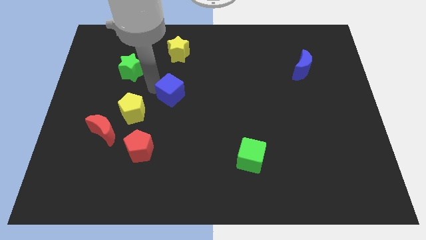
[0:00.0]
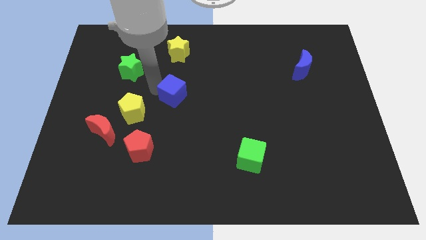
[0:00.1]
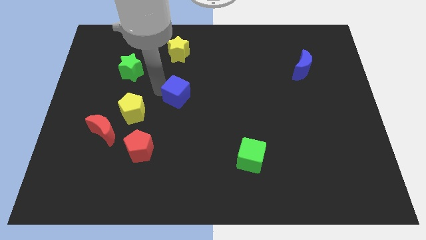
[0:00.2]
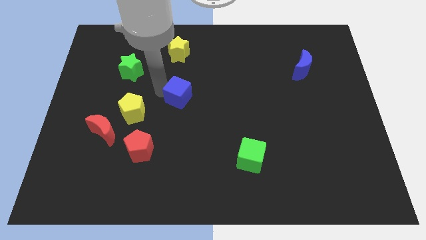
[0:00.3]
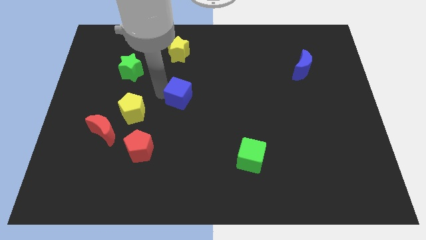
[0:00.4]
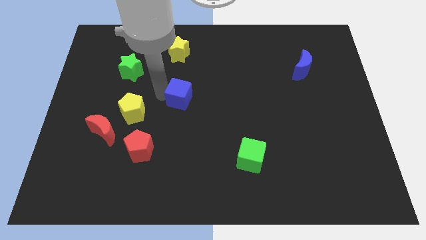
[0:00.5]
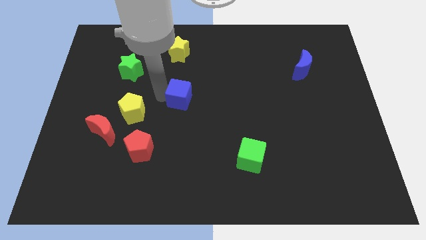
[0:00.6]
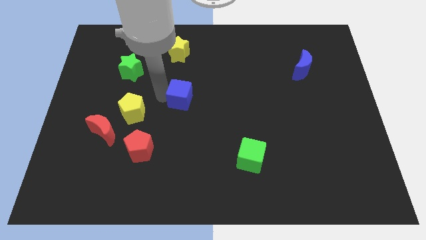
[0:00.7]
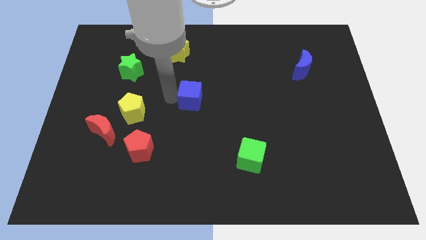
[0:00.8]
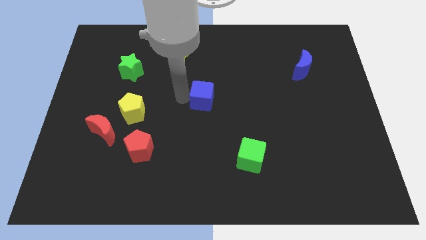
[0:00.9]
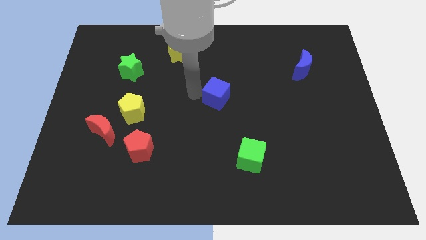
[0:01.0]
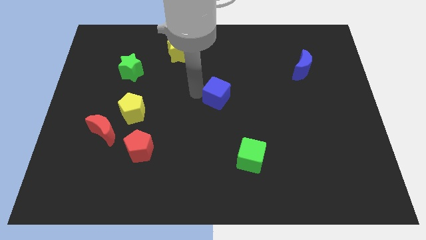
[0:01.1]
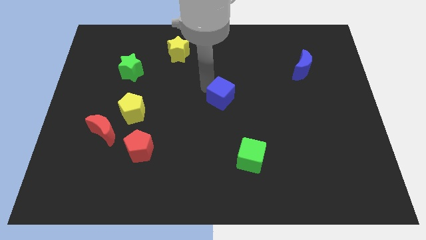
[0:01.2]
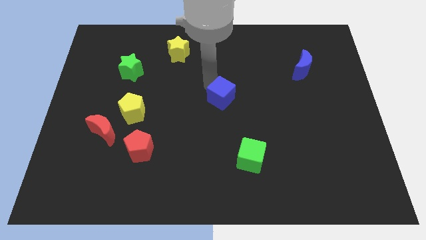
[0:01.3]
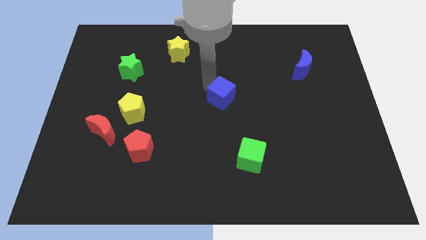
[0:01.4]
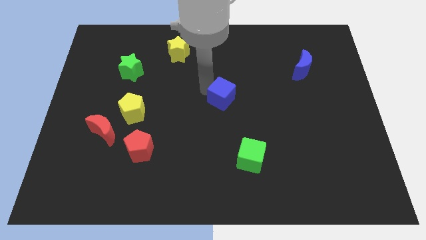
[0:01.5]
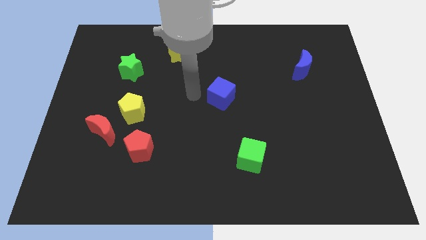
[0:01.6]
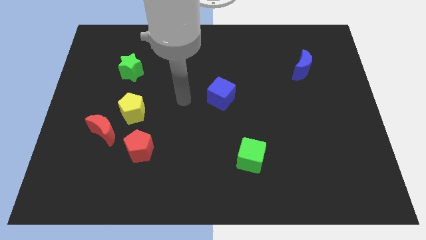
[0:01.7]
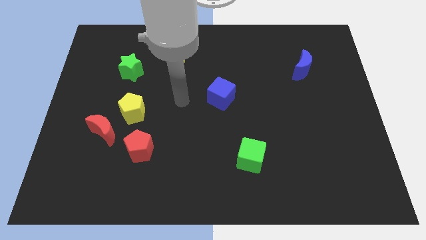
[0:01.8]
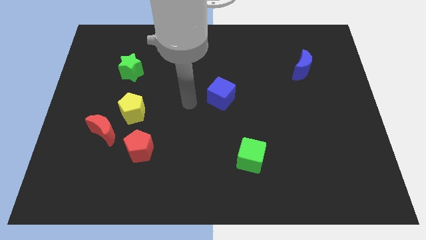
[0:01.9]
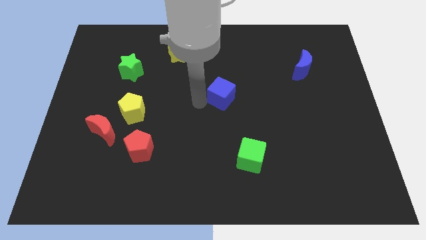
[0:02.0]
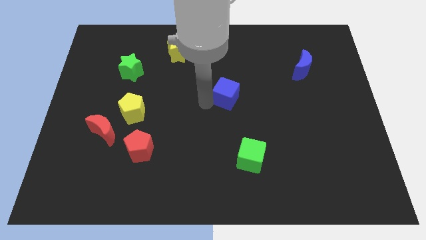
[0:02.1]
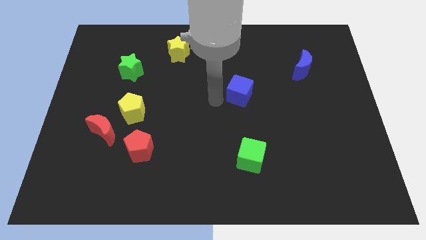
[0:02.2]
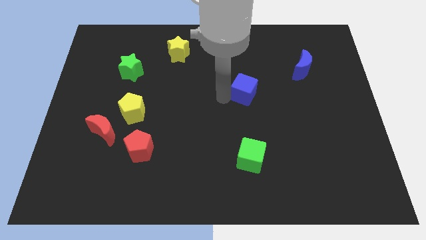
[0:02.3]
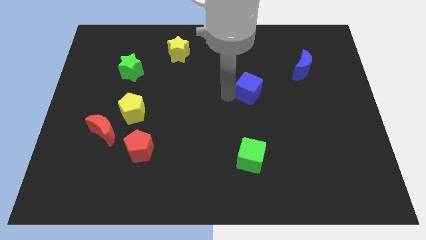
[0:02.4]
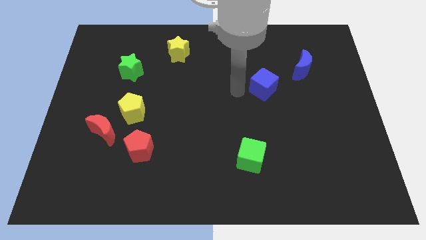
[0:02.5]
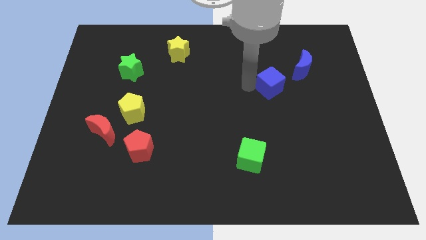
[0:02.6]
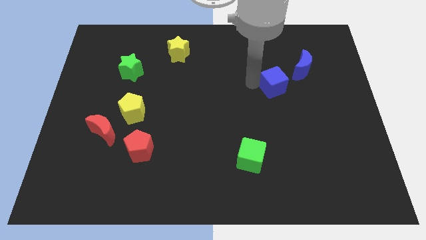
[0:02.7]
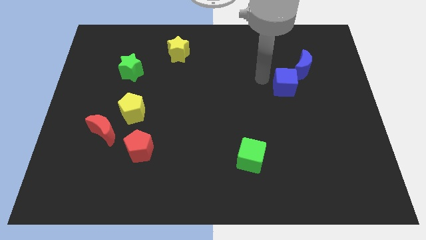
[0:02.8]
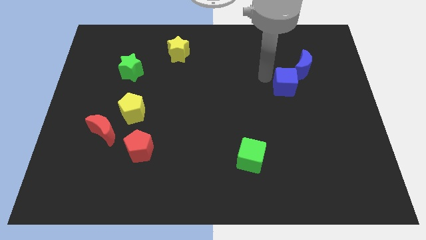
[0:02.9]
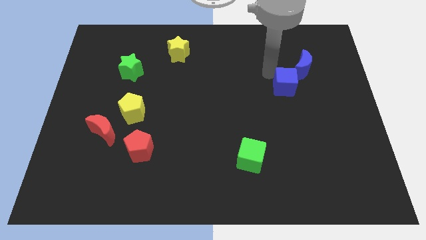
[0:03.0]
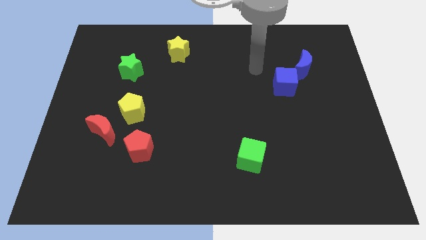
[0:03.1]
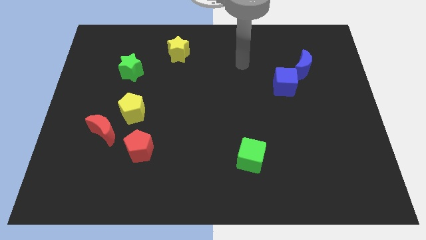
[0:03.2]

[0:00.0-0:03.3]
push the blue cube close to the blue crescent

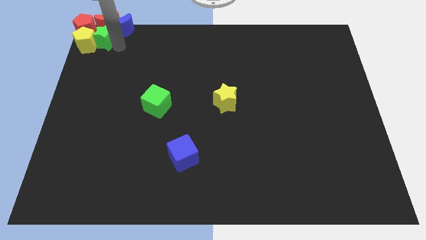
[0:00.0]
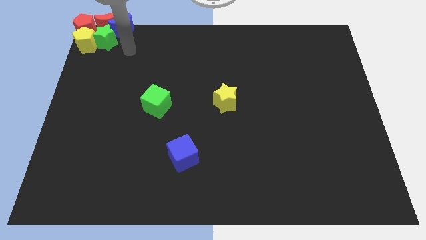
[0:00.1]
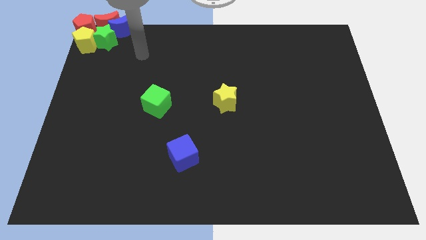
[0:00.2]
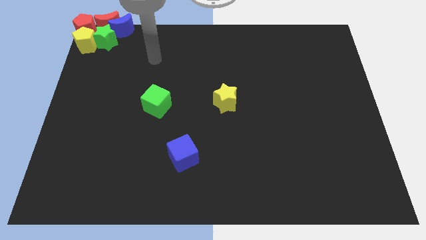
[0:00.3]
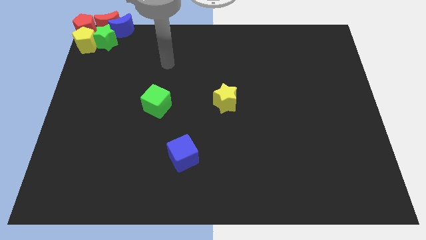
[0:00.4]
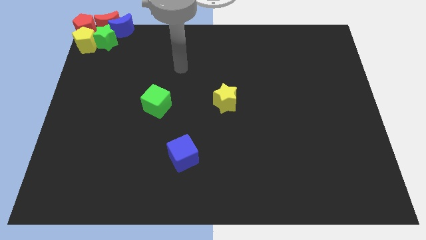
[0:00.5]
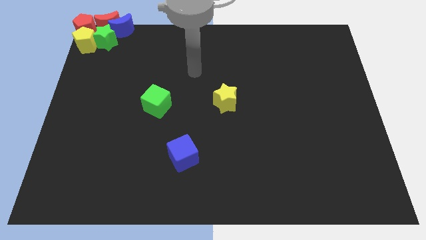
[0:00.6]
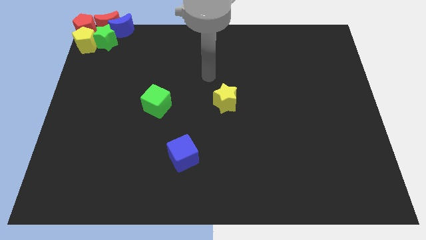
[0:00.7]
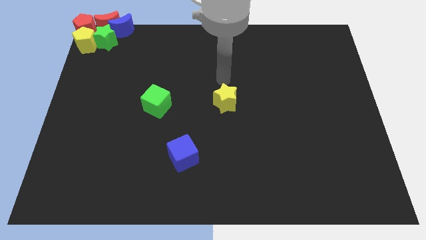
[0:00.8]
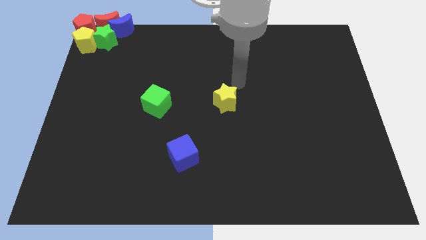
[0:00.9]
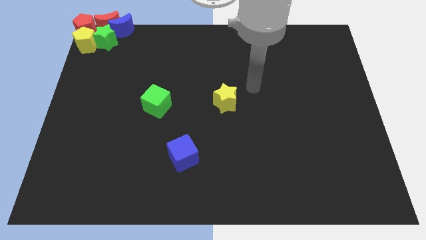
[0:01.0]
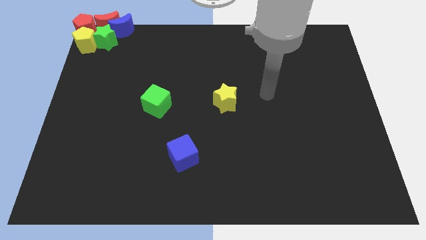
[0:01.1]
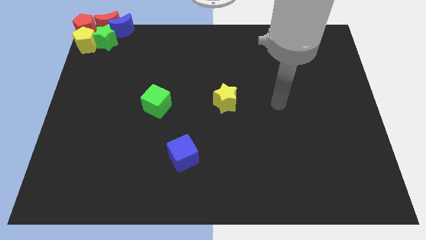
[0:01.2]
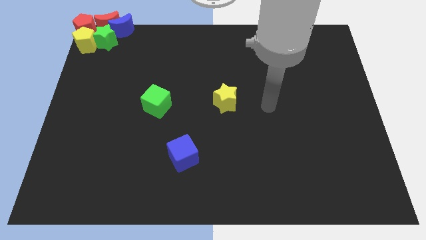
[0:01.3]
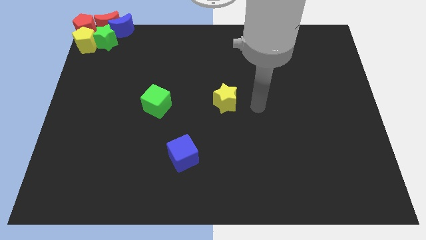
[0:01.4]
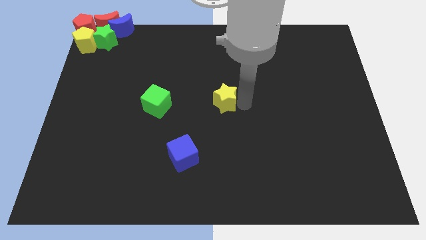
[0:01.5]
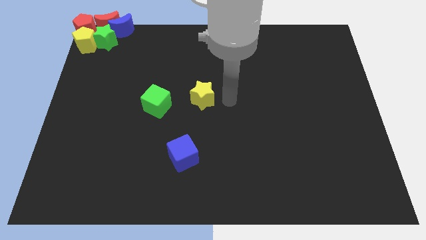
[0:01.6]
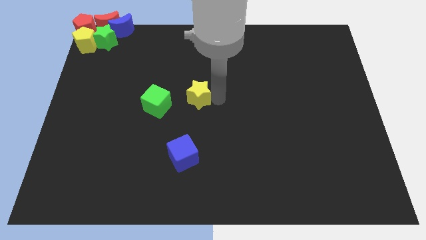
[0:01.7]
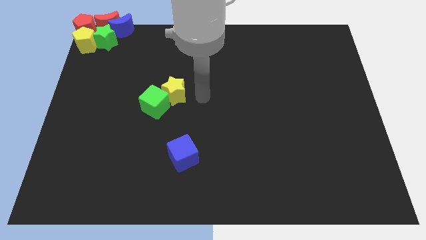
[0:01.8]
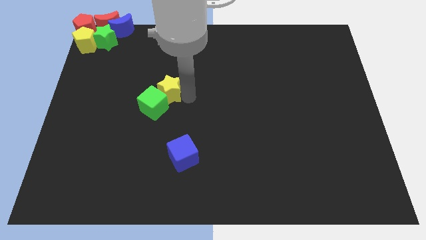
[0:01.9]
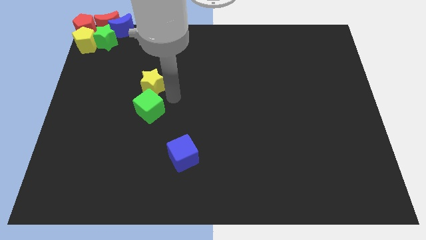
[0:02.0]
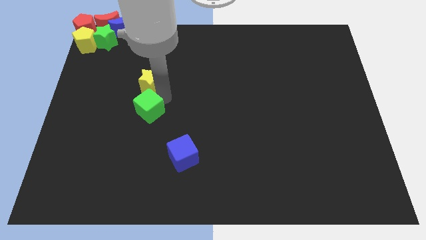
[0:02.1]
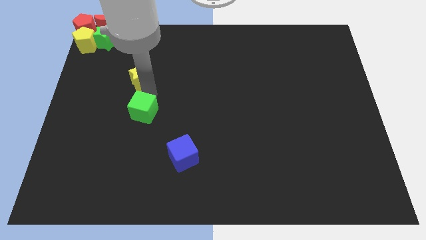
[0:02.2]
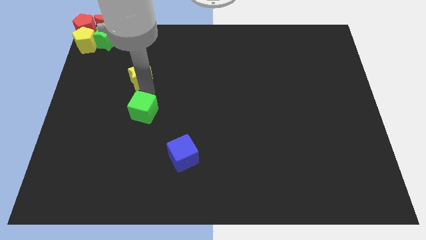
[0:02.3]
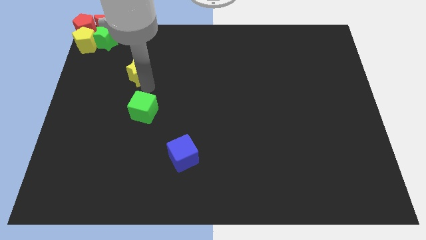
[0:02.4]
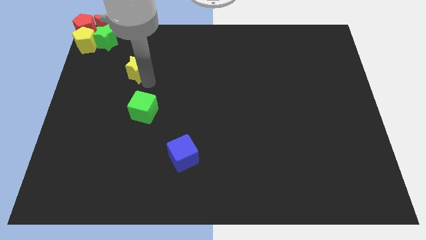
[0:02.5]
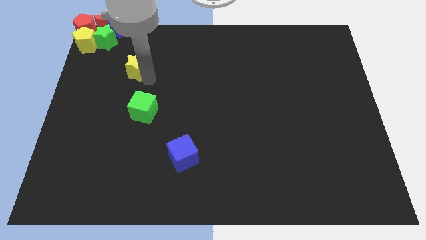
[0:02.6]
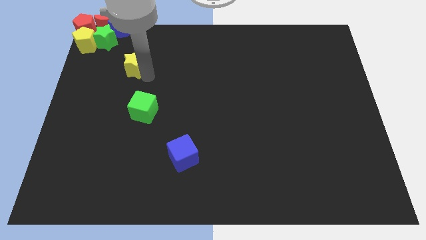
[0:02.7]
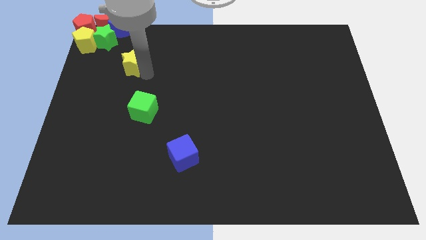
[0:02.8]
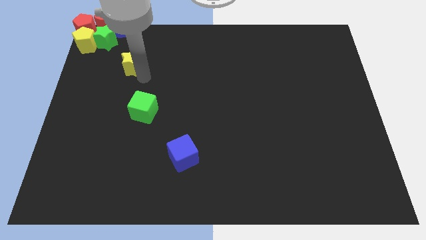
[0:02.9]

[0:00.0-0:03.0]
put the yellow star at the top side of the green cube

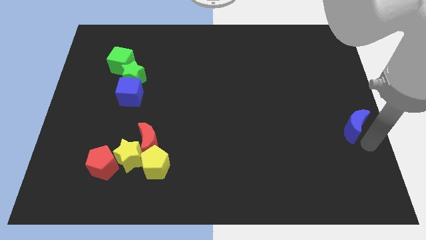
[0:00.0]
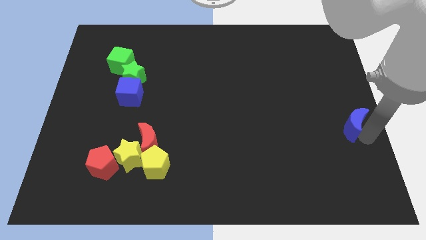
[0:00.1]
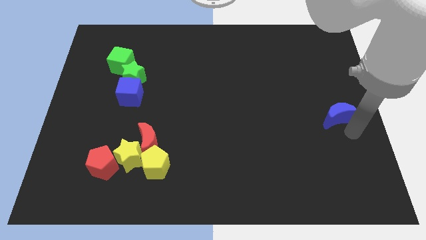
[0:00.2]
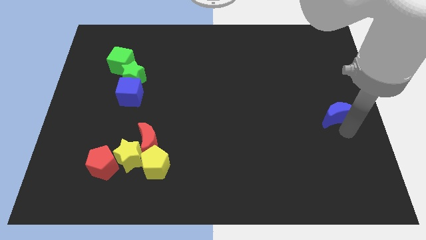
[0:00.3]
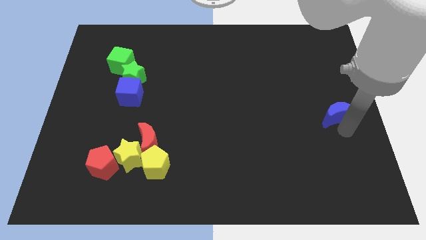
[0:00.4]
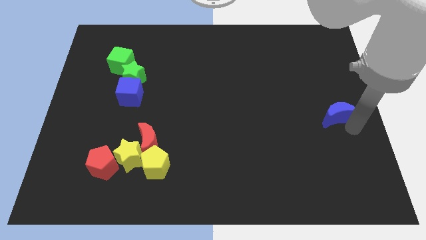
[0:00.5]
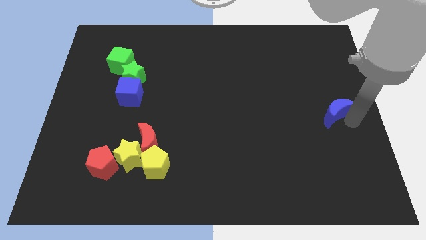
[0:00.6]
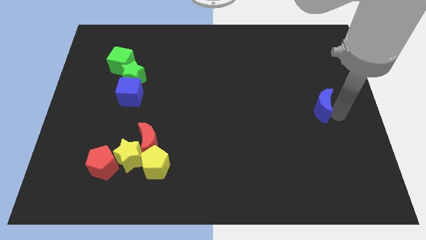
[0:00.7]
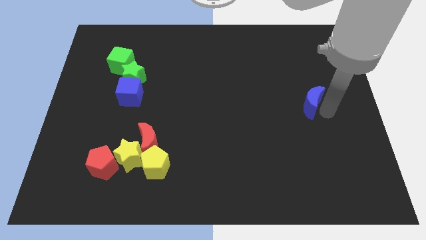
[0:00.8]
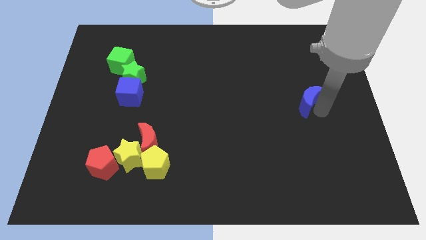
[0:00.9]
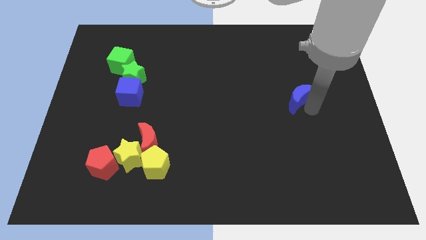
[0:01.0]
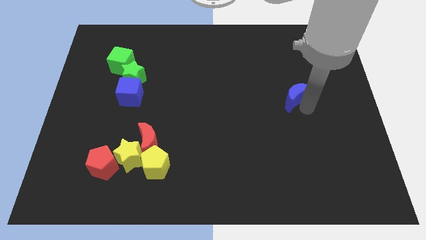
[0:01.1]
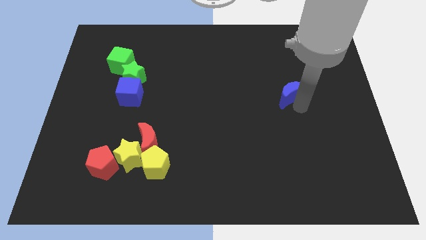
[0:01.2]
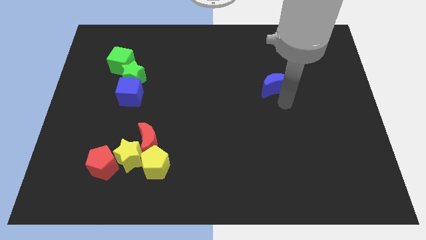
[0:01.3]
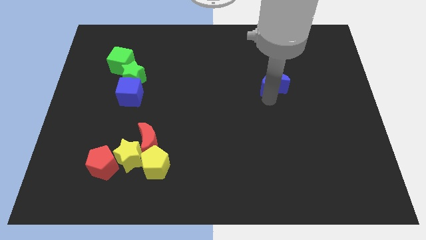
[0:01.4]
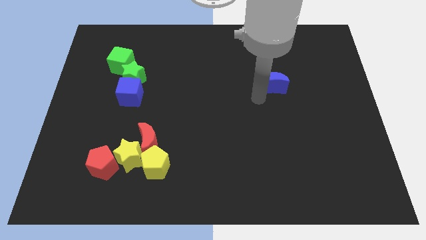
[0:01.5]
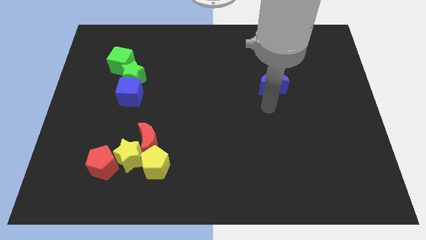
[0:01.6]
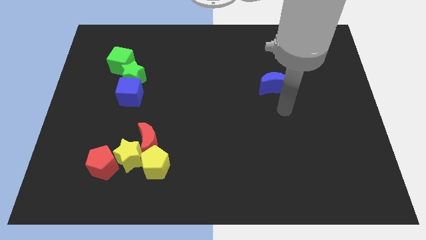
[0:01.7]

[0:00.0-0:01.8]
push the blue moon towards the top center

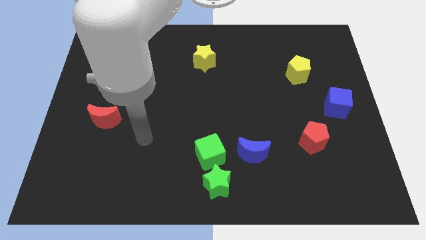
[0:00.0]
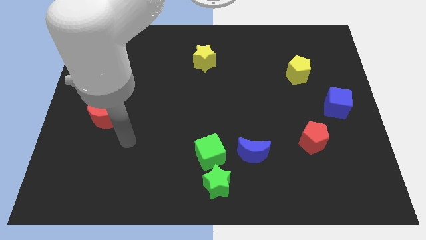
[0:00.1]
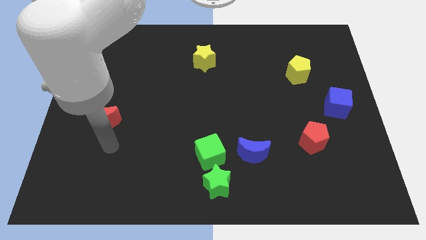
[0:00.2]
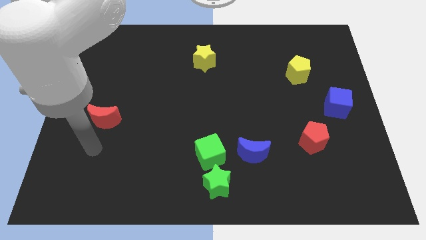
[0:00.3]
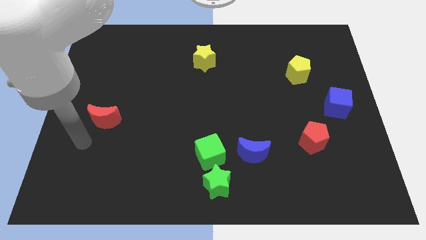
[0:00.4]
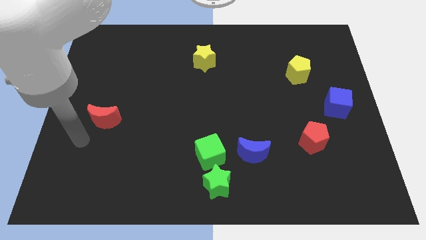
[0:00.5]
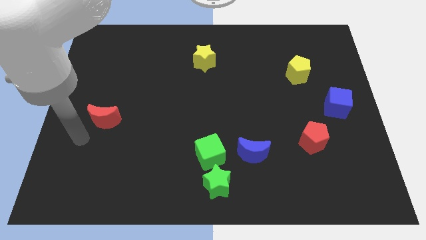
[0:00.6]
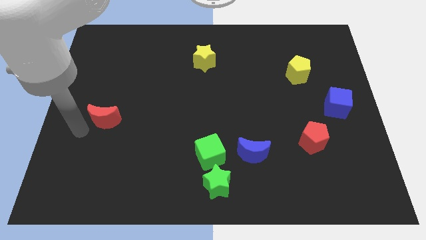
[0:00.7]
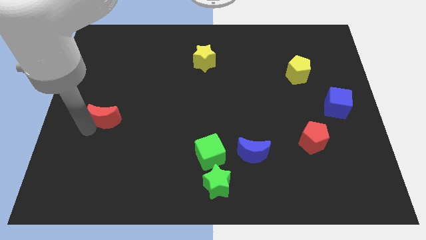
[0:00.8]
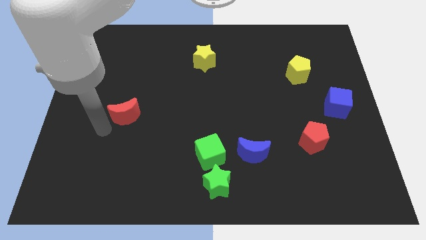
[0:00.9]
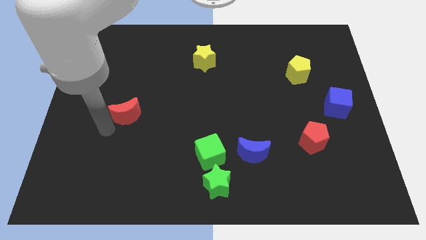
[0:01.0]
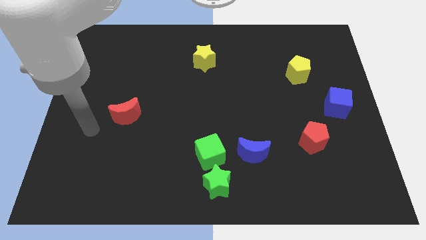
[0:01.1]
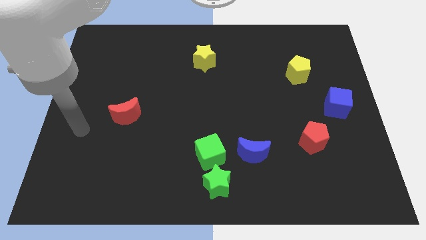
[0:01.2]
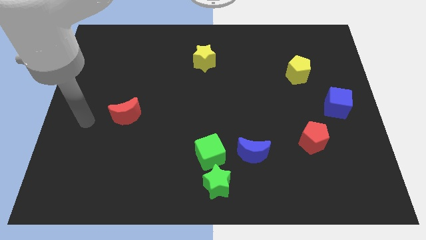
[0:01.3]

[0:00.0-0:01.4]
push the red crescent slightly to the right
